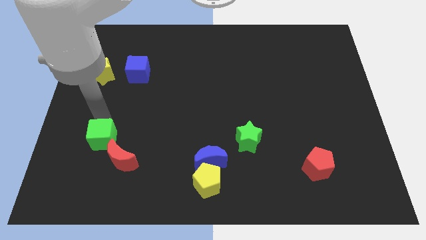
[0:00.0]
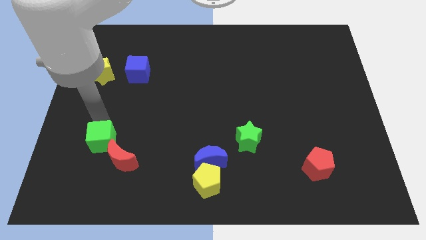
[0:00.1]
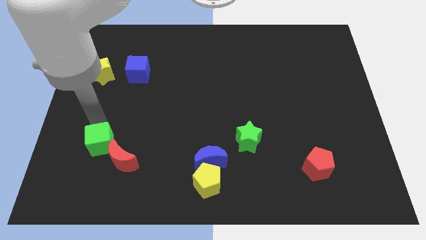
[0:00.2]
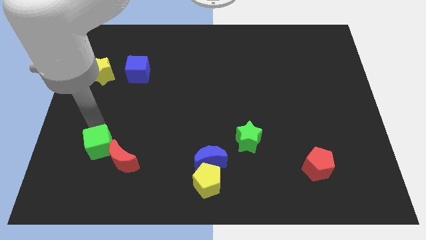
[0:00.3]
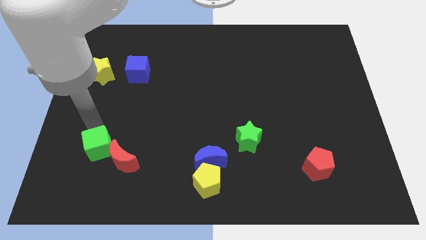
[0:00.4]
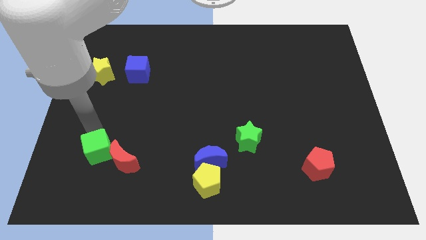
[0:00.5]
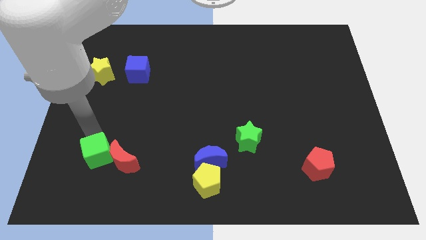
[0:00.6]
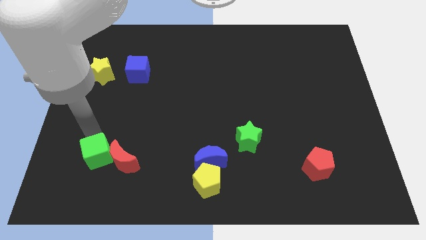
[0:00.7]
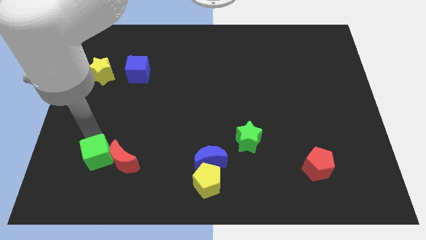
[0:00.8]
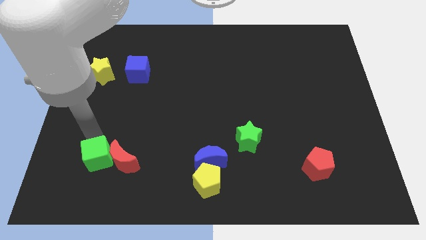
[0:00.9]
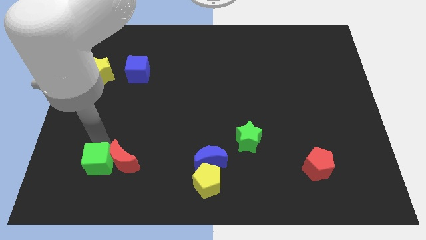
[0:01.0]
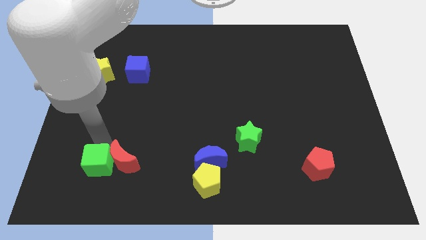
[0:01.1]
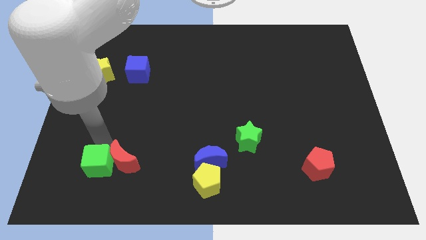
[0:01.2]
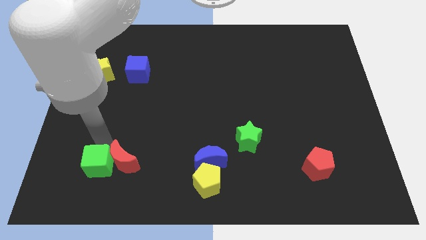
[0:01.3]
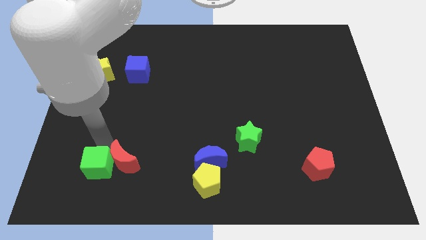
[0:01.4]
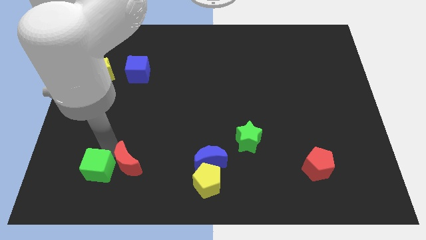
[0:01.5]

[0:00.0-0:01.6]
move the green cube slightly downwards

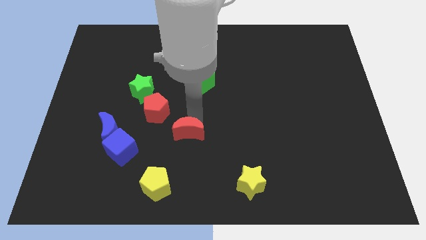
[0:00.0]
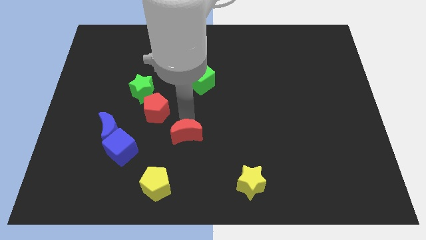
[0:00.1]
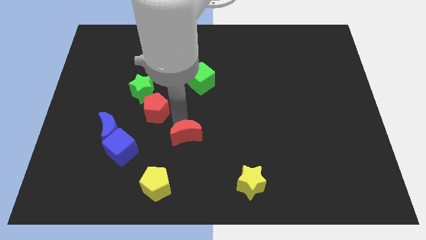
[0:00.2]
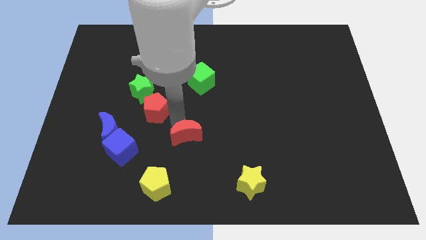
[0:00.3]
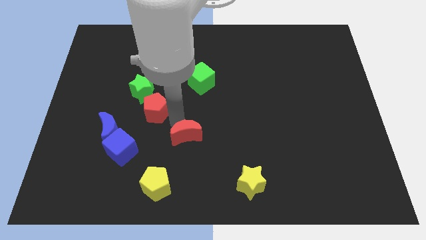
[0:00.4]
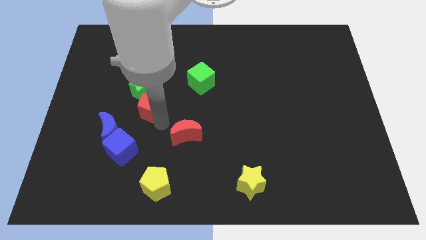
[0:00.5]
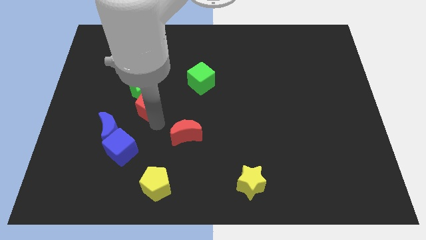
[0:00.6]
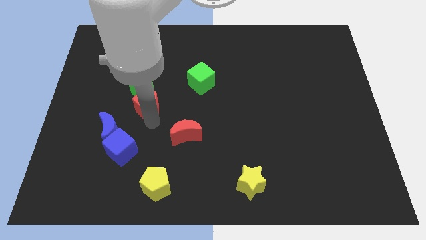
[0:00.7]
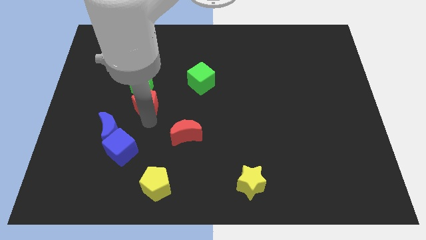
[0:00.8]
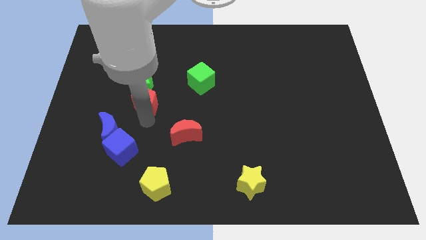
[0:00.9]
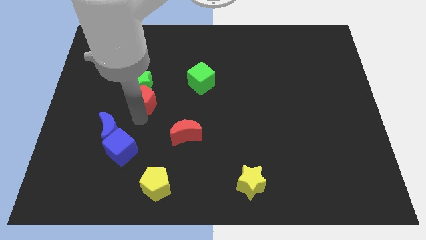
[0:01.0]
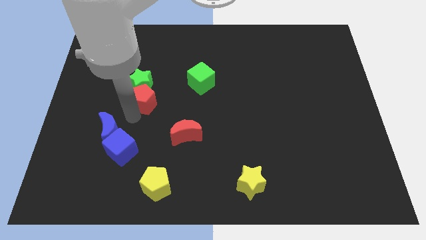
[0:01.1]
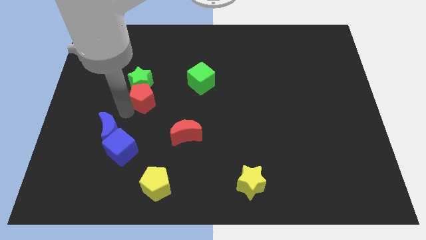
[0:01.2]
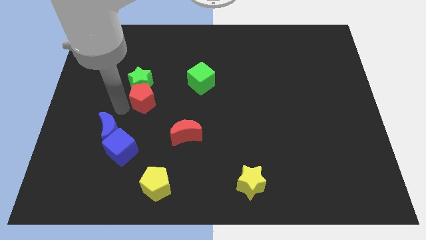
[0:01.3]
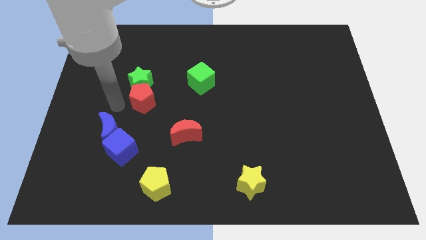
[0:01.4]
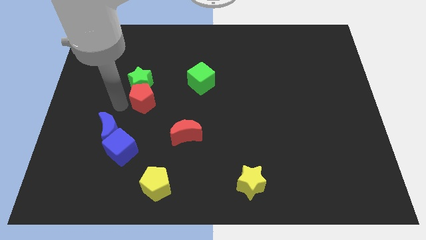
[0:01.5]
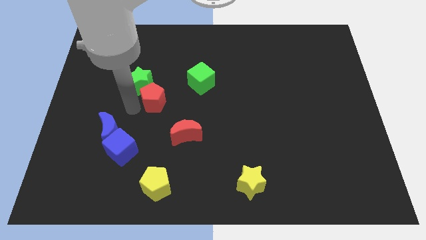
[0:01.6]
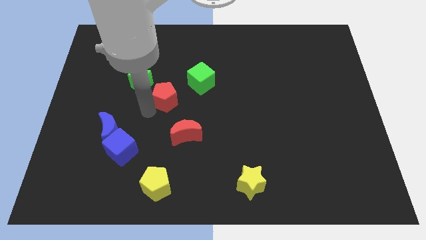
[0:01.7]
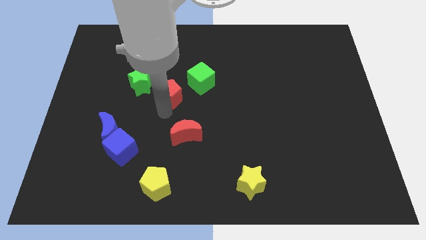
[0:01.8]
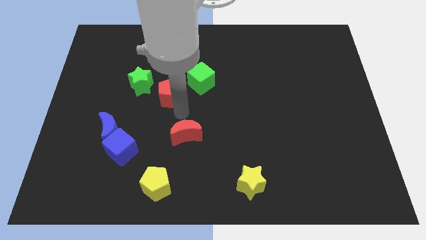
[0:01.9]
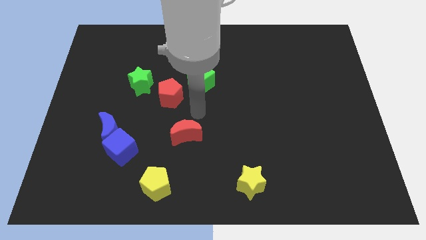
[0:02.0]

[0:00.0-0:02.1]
move the red pentagon slightly right

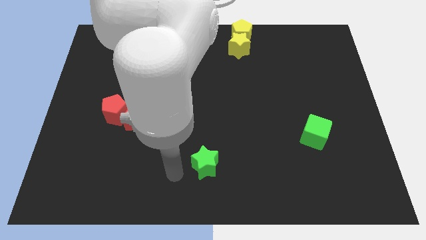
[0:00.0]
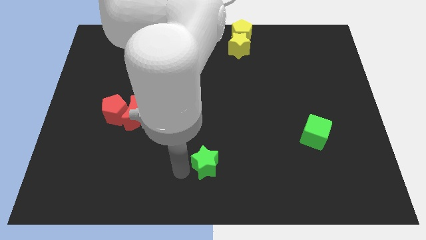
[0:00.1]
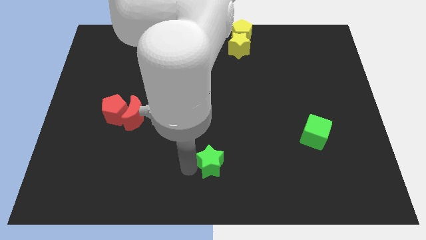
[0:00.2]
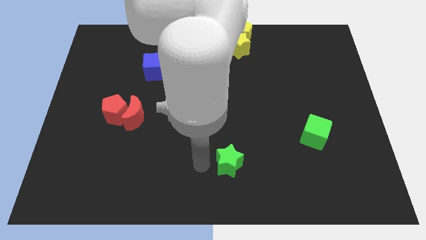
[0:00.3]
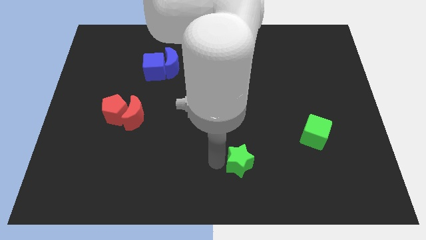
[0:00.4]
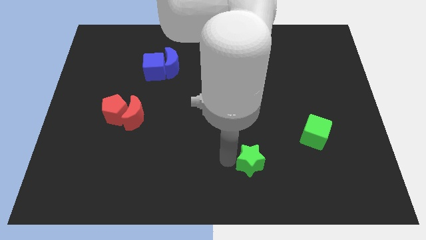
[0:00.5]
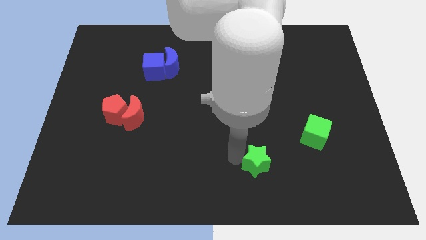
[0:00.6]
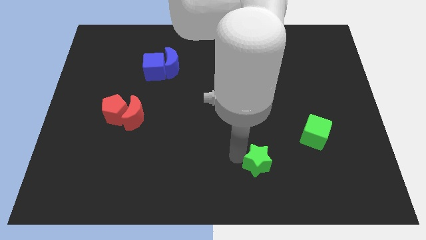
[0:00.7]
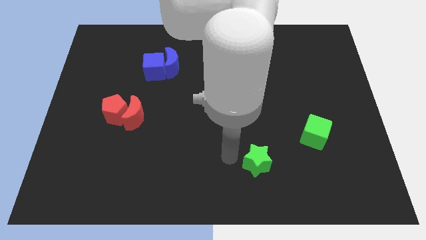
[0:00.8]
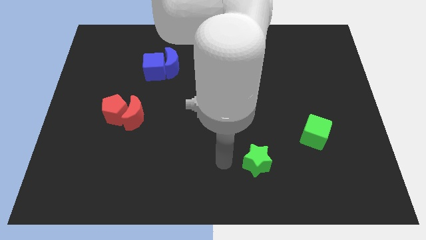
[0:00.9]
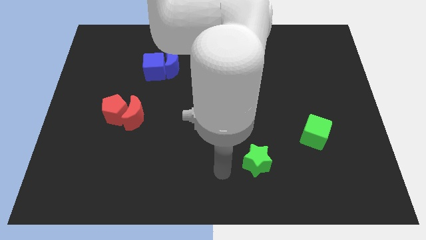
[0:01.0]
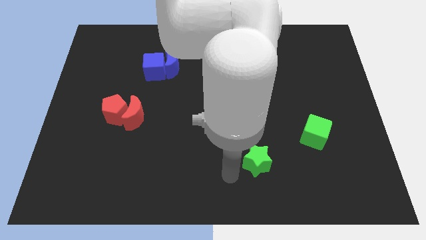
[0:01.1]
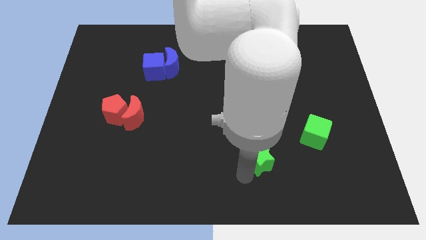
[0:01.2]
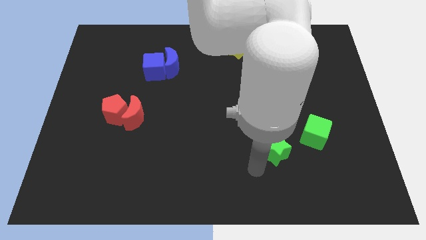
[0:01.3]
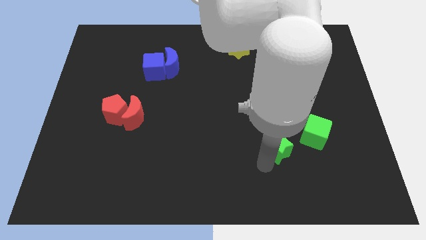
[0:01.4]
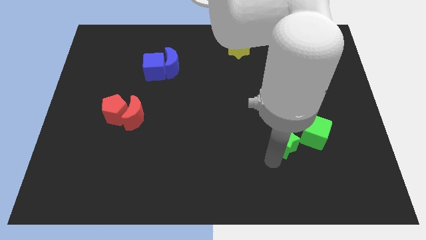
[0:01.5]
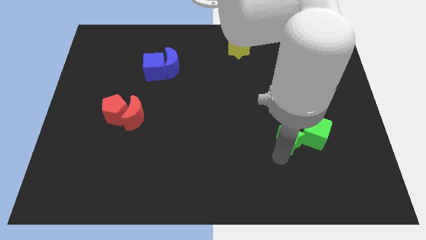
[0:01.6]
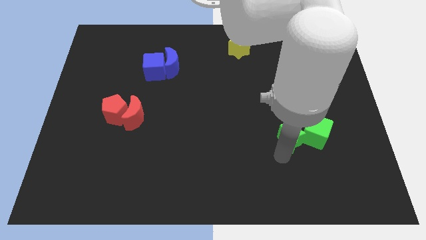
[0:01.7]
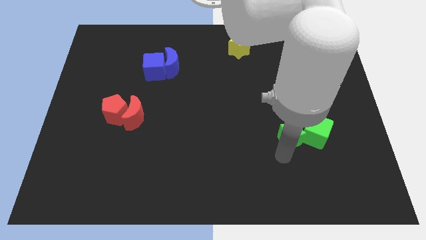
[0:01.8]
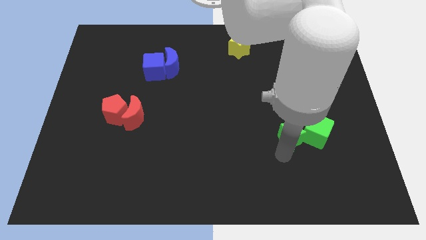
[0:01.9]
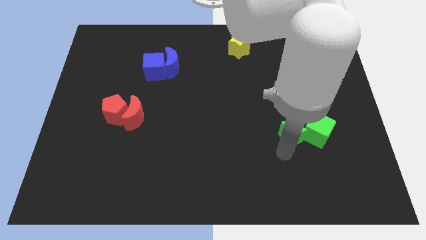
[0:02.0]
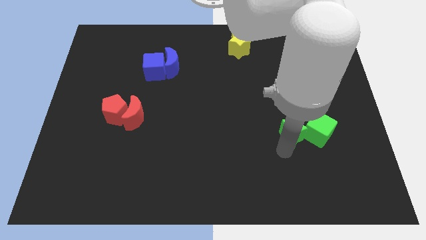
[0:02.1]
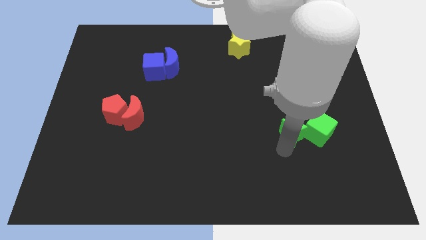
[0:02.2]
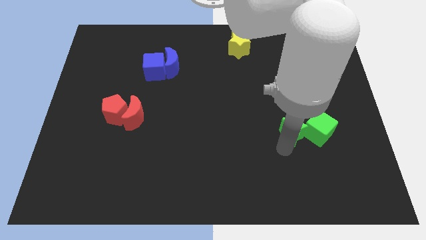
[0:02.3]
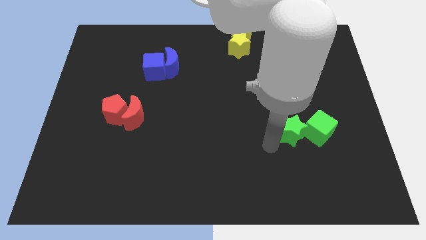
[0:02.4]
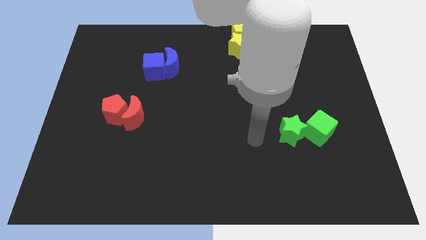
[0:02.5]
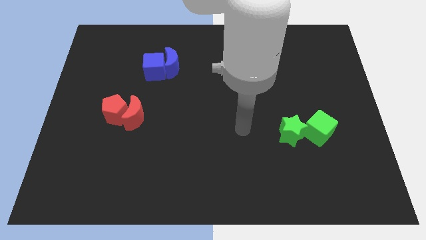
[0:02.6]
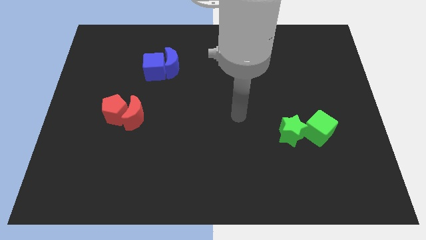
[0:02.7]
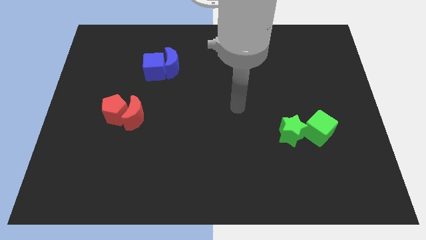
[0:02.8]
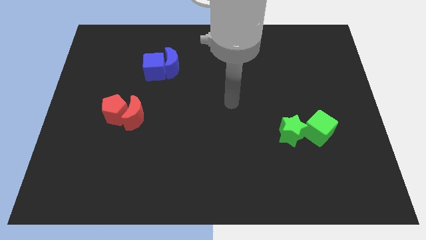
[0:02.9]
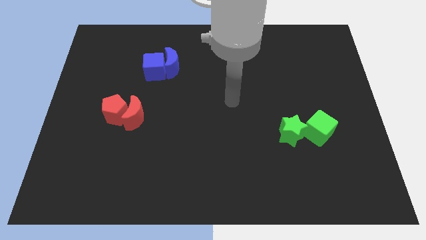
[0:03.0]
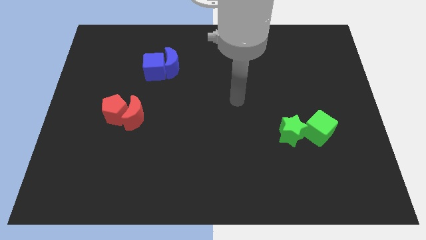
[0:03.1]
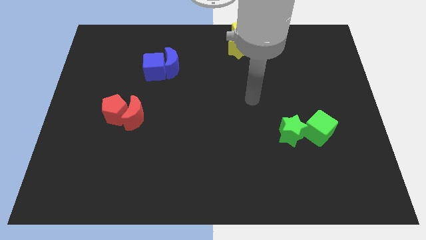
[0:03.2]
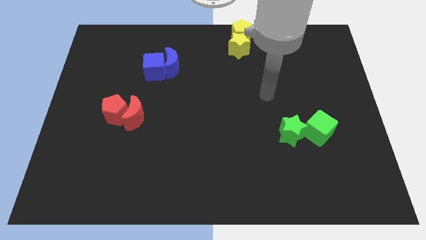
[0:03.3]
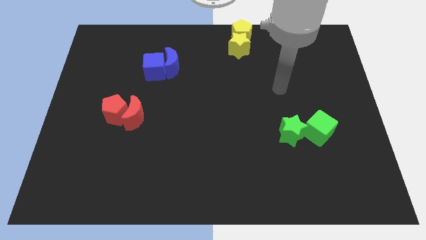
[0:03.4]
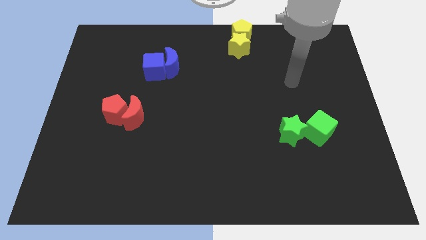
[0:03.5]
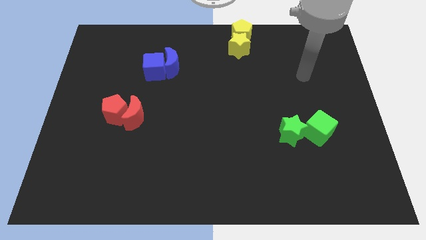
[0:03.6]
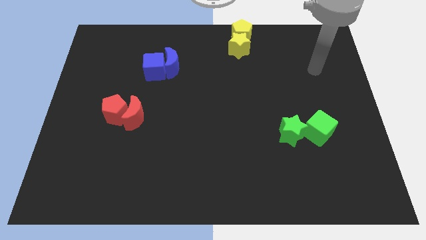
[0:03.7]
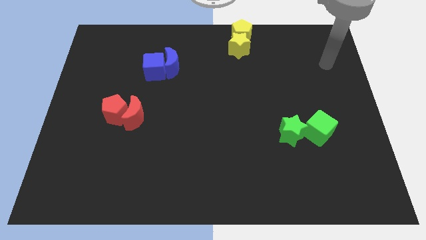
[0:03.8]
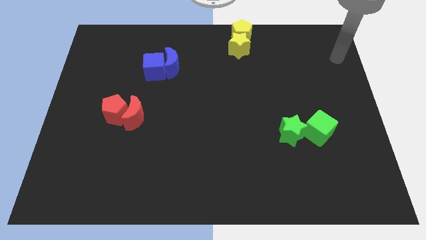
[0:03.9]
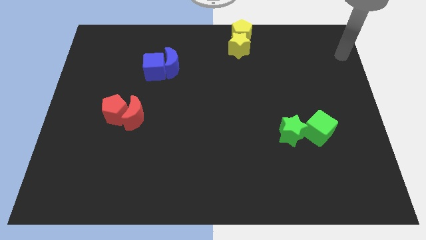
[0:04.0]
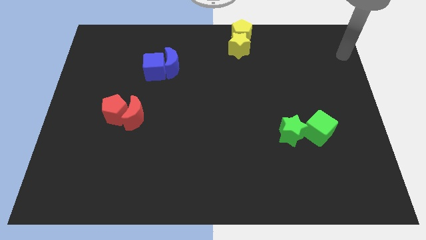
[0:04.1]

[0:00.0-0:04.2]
push the green star into the green cube and go away

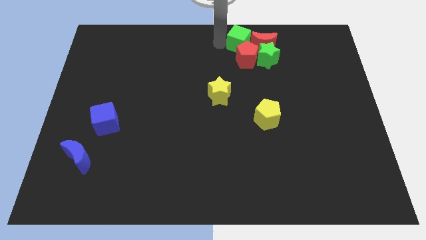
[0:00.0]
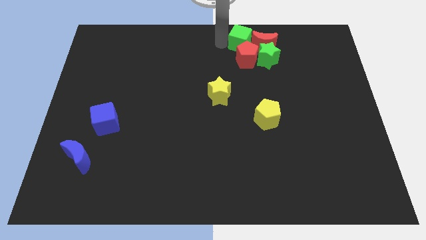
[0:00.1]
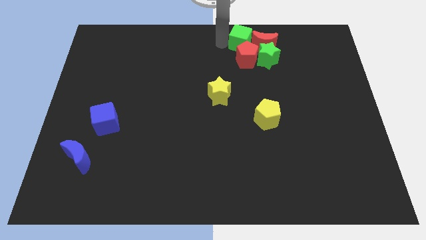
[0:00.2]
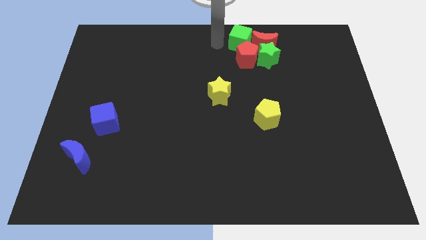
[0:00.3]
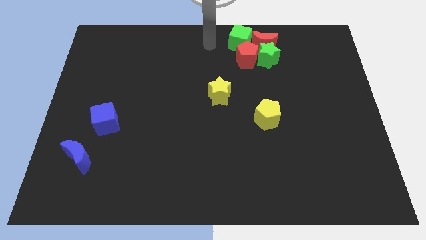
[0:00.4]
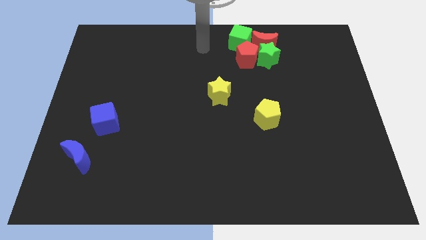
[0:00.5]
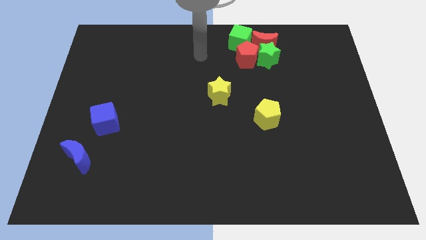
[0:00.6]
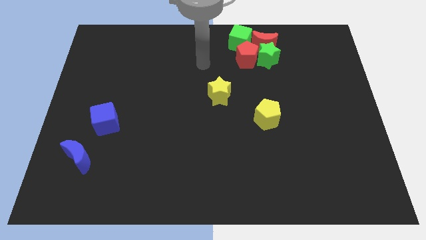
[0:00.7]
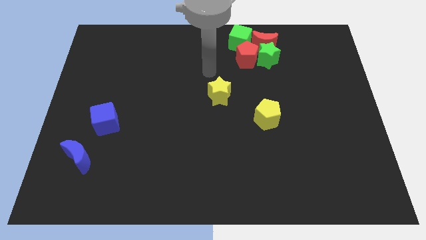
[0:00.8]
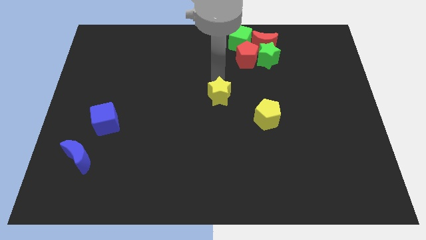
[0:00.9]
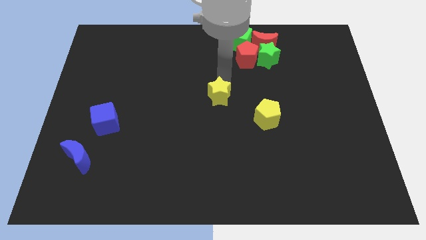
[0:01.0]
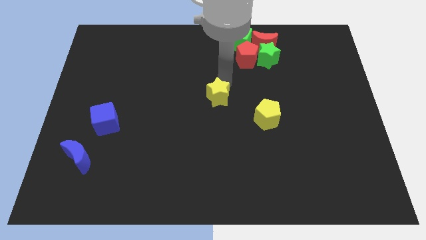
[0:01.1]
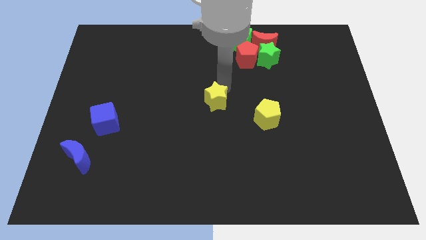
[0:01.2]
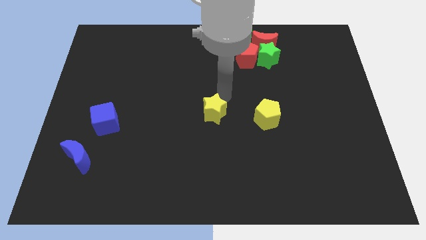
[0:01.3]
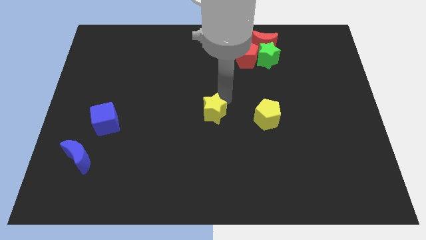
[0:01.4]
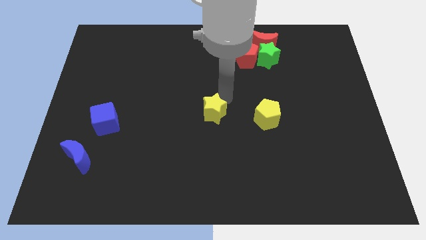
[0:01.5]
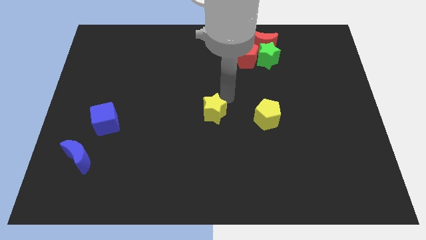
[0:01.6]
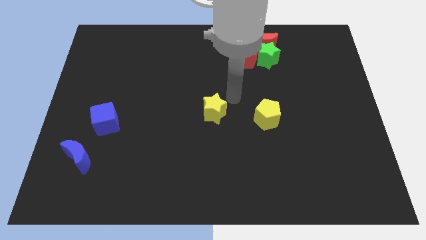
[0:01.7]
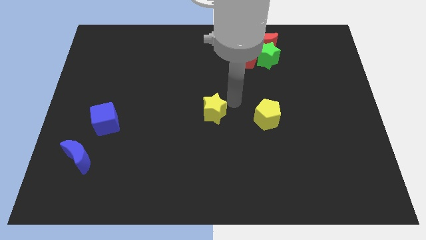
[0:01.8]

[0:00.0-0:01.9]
move yellow star left to the yellow pentagon
